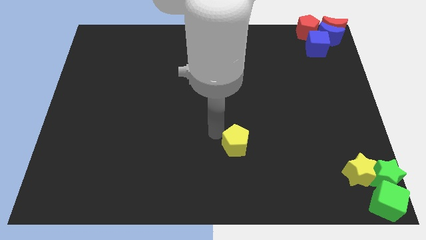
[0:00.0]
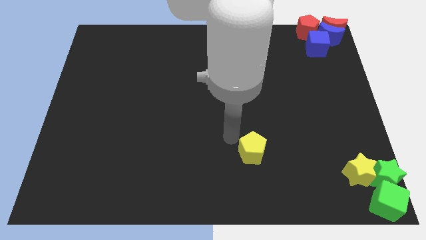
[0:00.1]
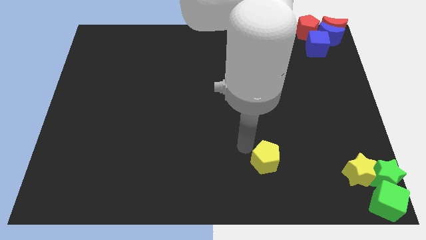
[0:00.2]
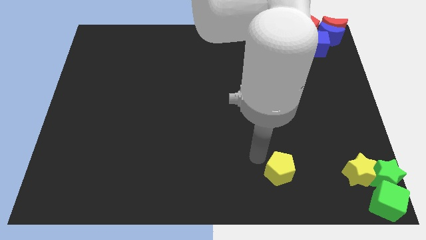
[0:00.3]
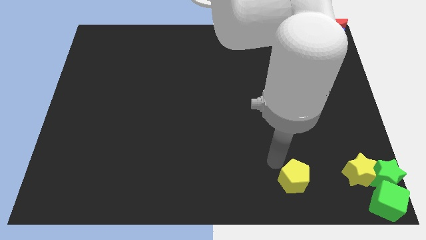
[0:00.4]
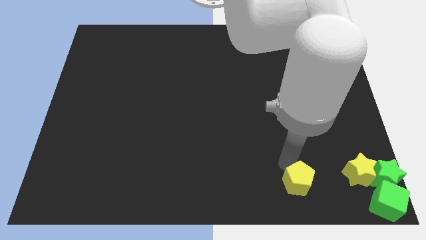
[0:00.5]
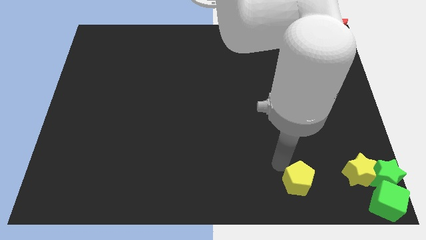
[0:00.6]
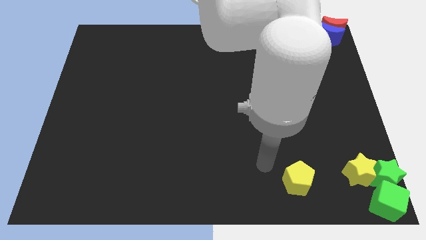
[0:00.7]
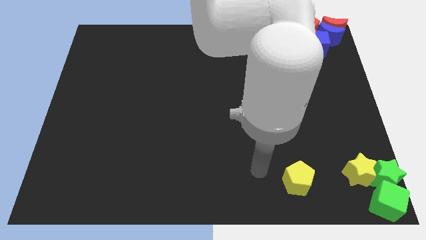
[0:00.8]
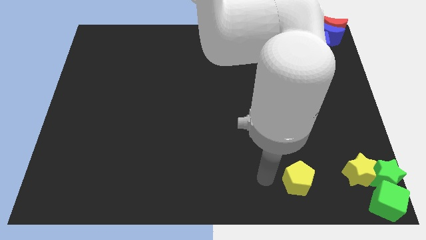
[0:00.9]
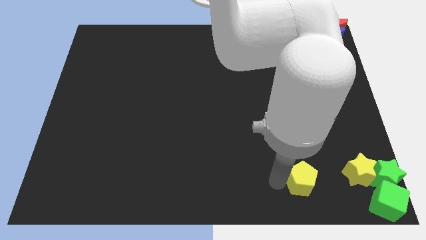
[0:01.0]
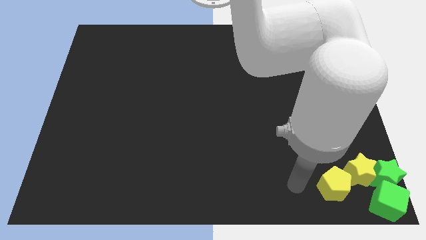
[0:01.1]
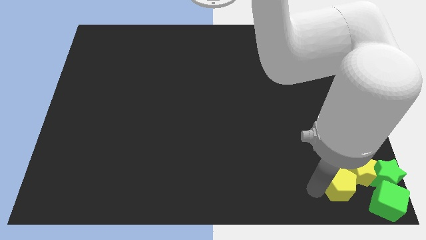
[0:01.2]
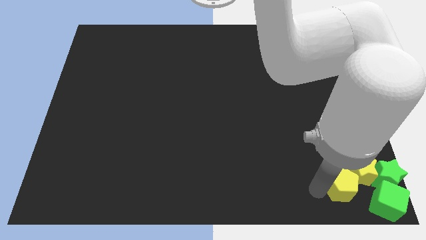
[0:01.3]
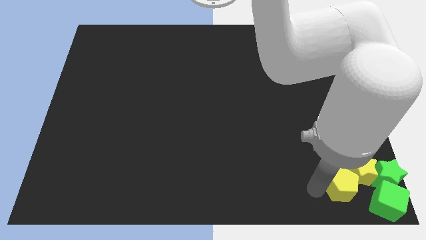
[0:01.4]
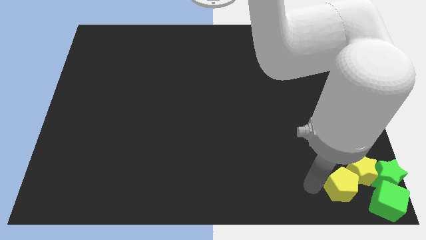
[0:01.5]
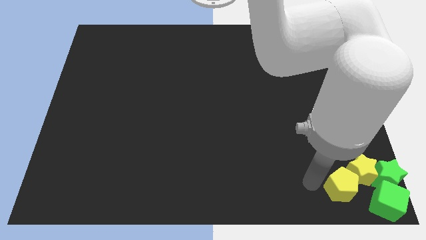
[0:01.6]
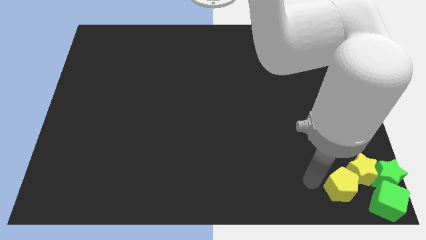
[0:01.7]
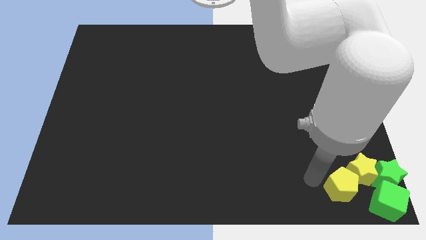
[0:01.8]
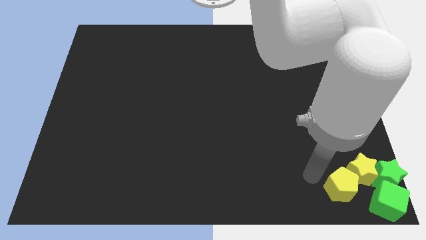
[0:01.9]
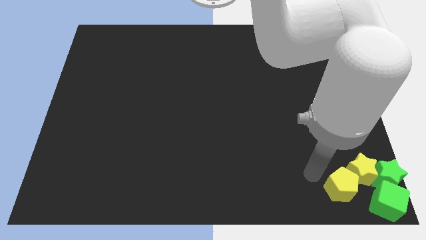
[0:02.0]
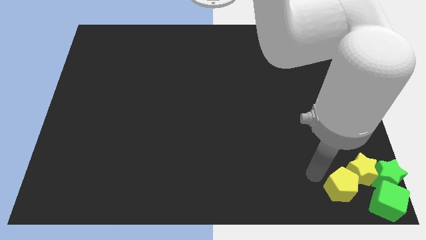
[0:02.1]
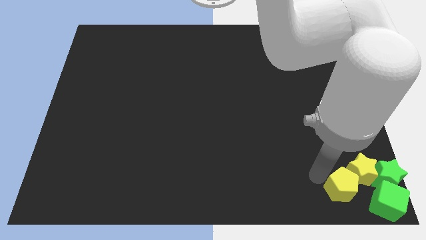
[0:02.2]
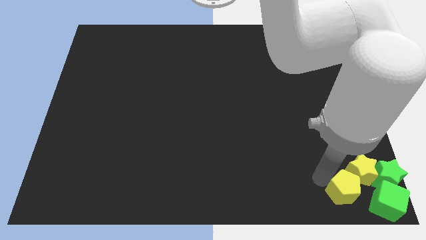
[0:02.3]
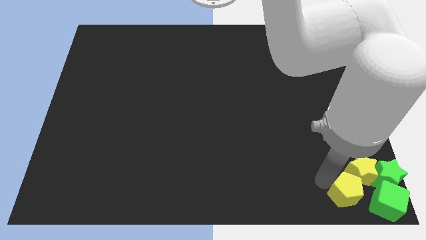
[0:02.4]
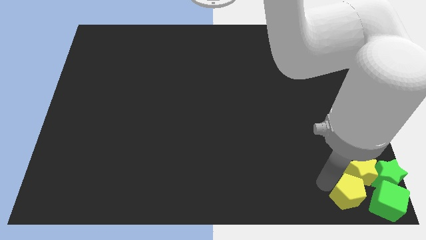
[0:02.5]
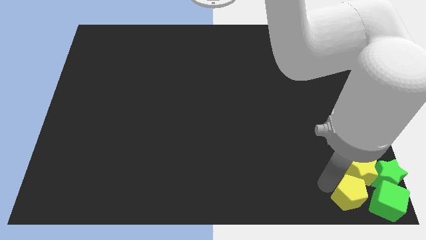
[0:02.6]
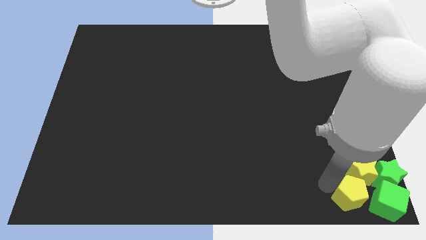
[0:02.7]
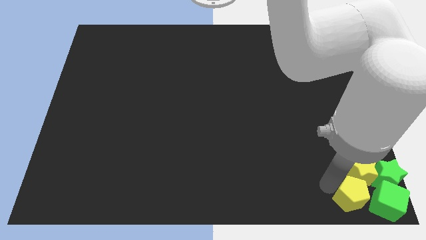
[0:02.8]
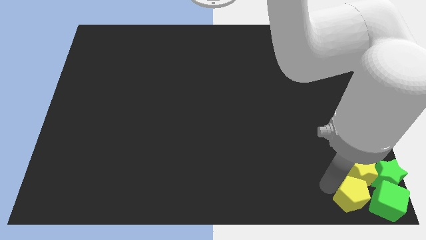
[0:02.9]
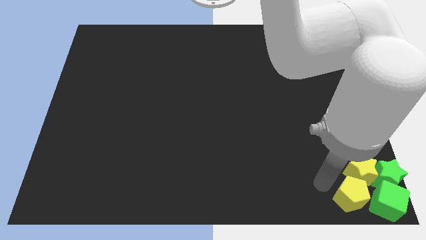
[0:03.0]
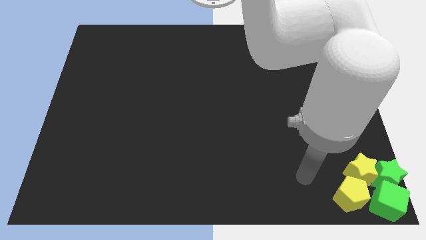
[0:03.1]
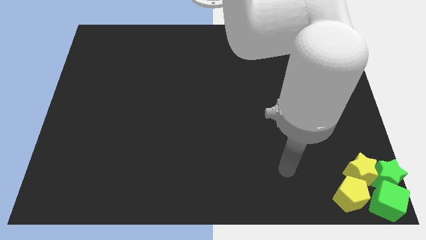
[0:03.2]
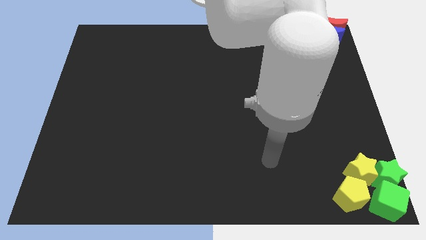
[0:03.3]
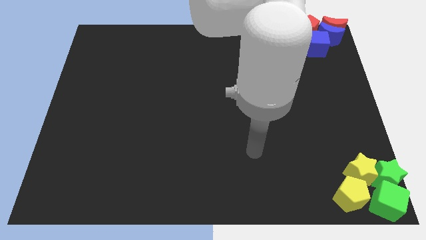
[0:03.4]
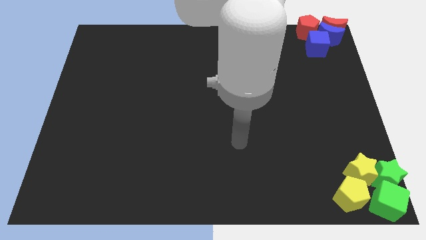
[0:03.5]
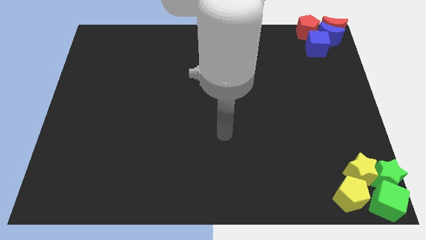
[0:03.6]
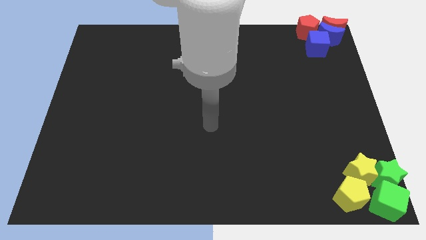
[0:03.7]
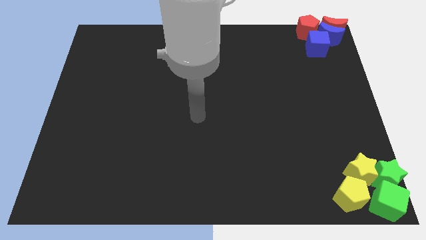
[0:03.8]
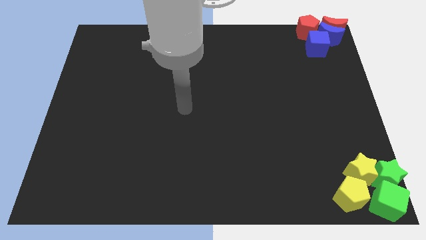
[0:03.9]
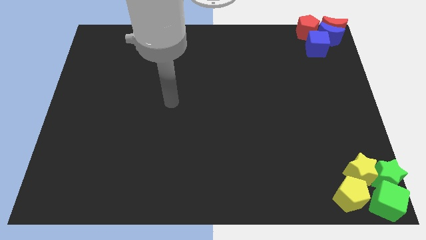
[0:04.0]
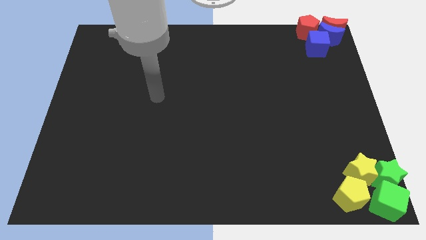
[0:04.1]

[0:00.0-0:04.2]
place the yellow pentagon towards the left side of the green cube

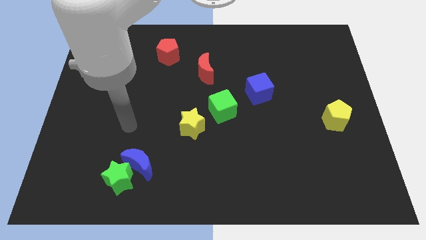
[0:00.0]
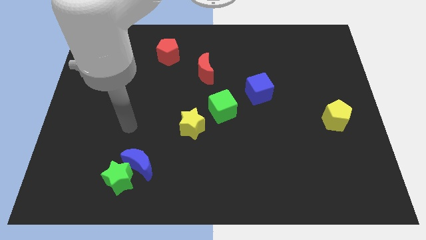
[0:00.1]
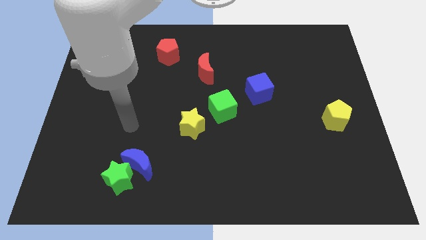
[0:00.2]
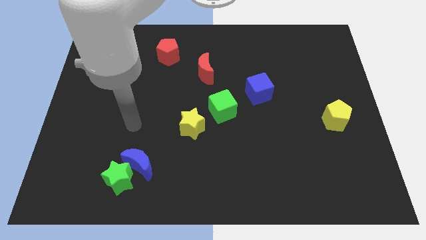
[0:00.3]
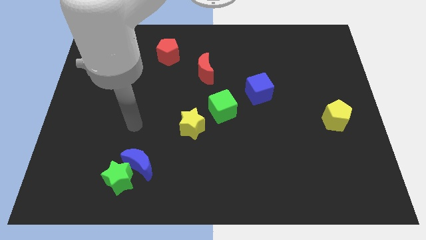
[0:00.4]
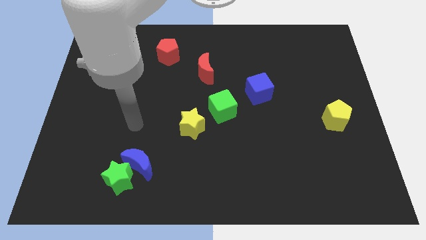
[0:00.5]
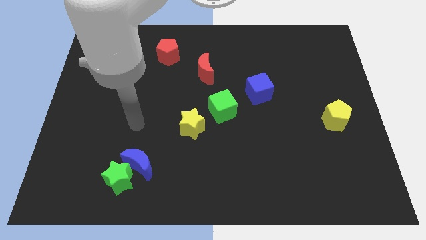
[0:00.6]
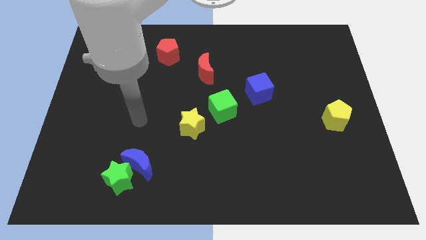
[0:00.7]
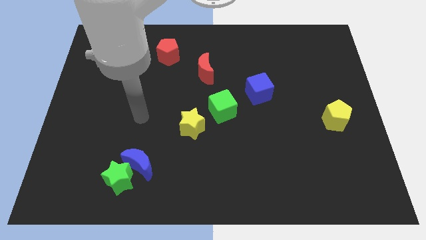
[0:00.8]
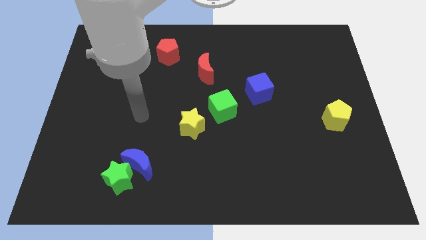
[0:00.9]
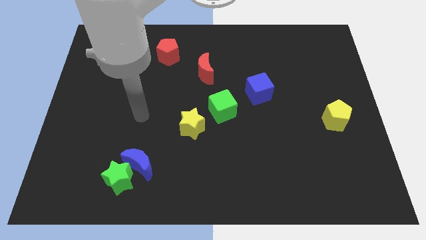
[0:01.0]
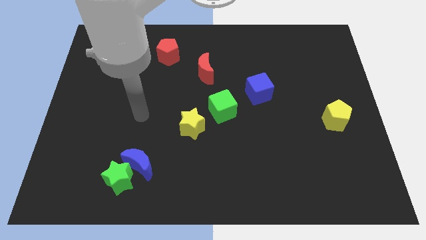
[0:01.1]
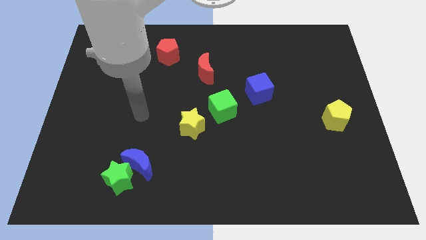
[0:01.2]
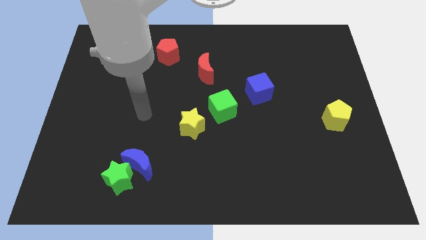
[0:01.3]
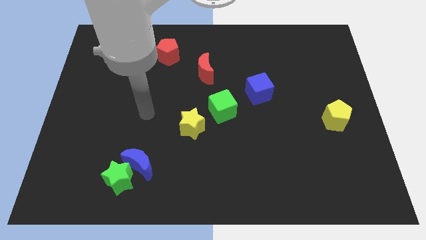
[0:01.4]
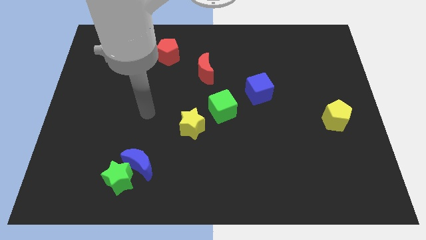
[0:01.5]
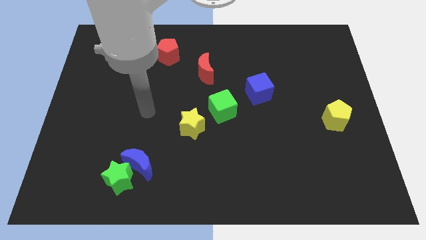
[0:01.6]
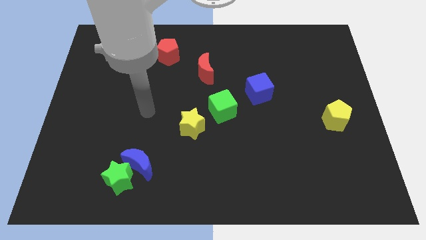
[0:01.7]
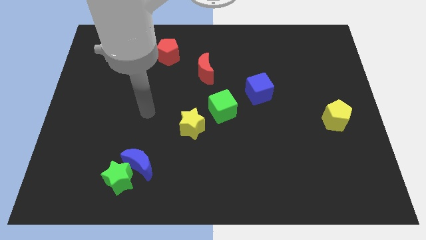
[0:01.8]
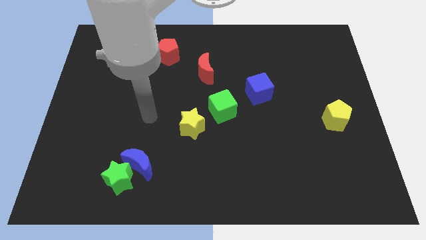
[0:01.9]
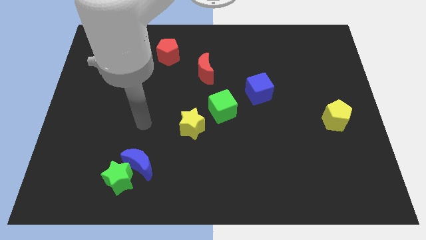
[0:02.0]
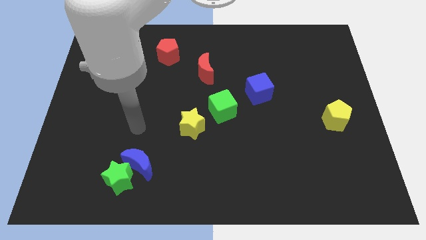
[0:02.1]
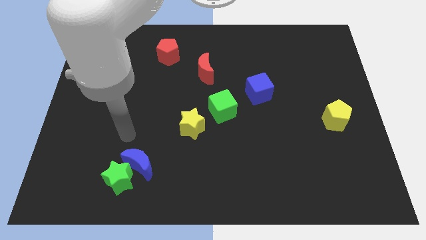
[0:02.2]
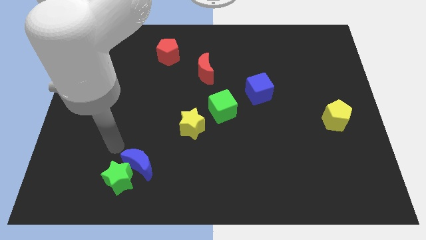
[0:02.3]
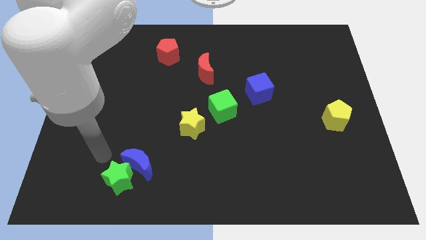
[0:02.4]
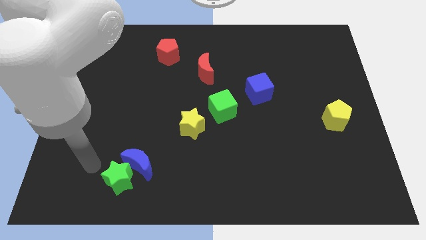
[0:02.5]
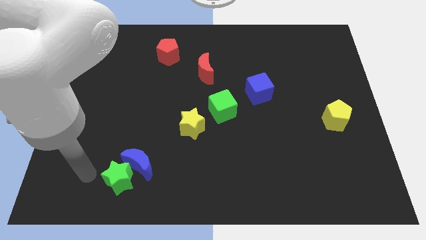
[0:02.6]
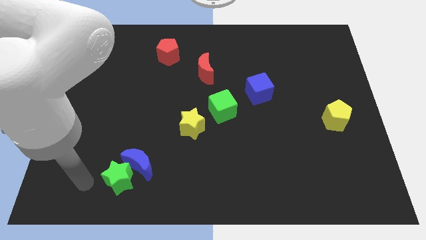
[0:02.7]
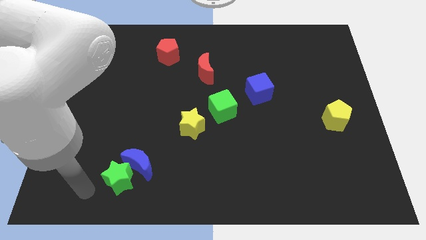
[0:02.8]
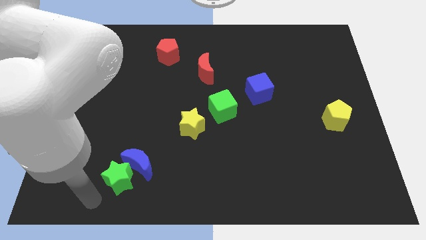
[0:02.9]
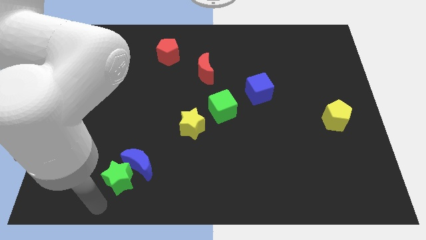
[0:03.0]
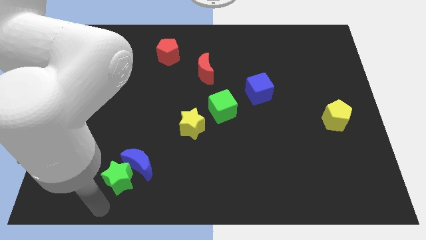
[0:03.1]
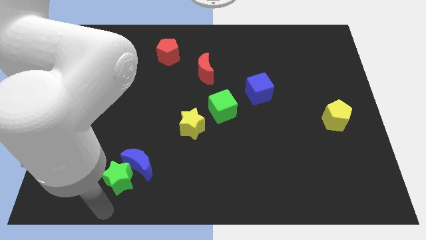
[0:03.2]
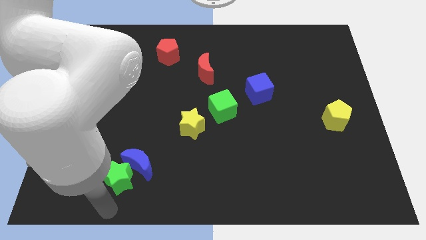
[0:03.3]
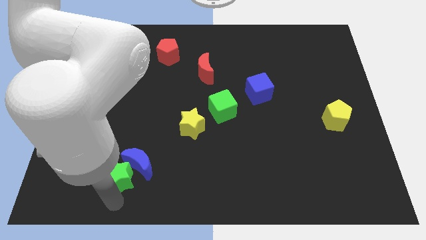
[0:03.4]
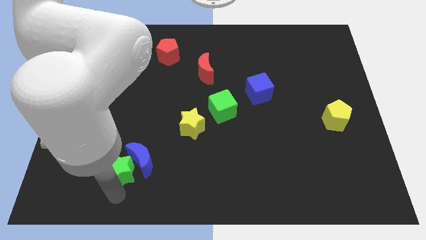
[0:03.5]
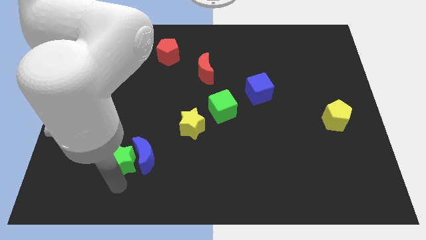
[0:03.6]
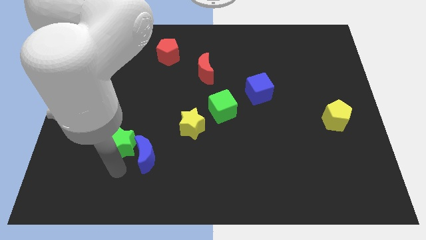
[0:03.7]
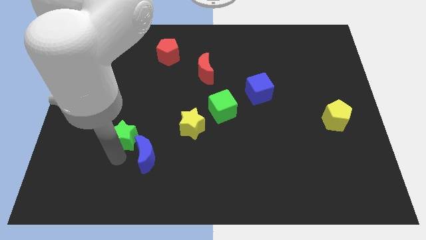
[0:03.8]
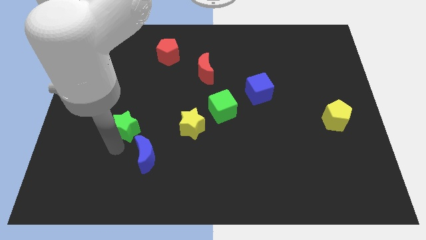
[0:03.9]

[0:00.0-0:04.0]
push the green star to the horizontal left side of the yellow star

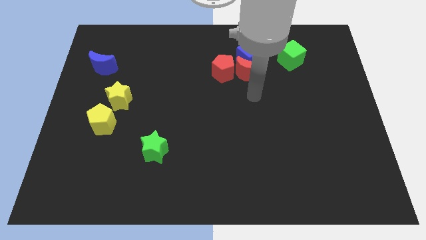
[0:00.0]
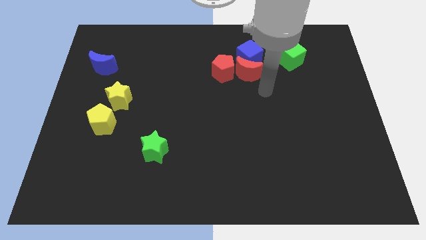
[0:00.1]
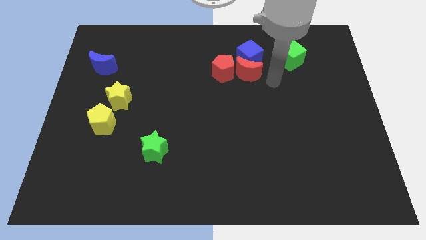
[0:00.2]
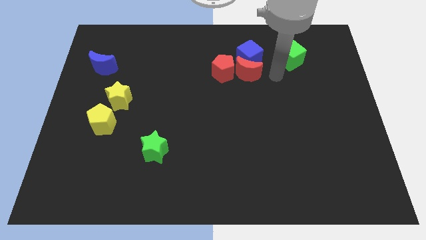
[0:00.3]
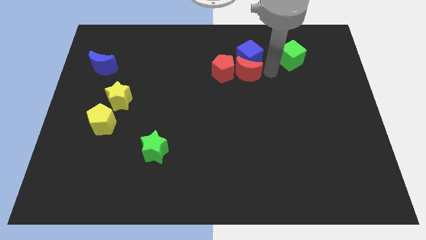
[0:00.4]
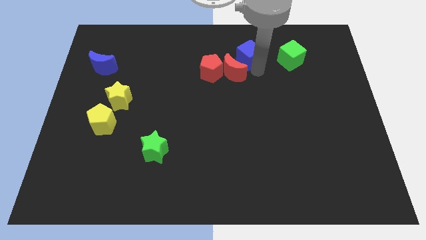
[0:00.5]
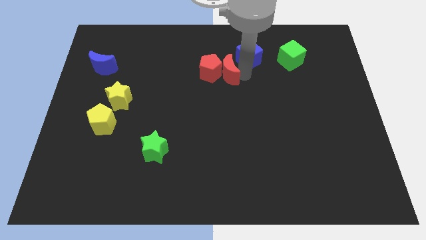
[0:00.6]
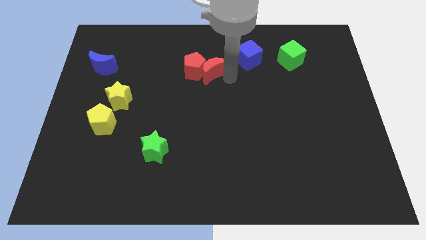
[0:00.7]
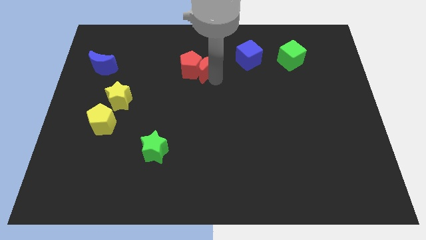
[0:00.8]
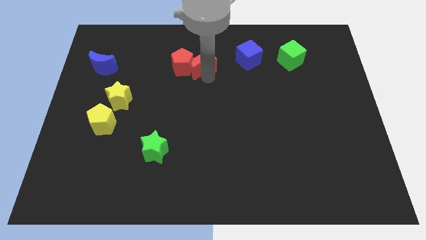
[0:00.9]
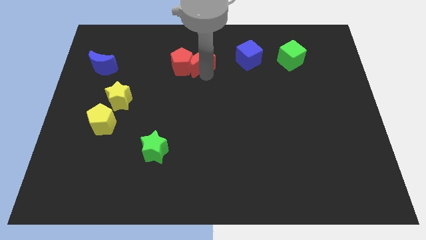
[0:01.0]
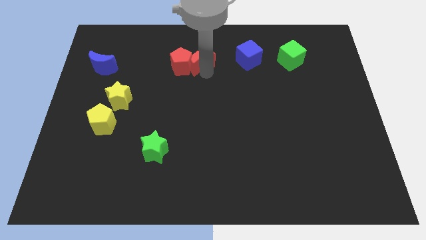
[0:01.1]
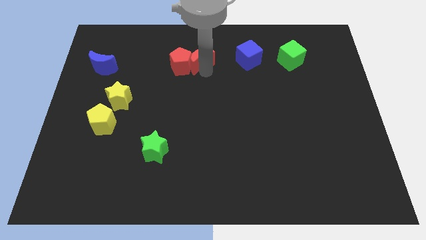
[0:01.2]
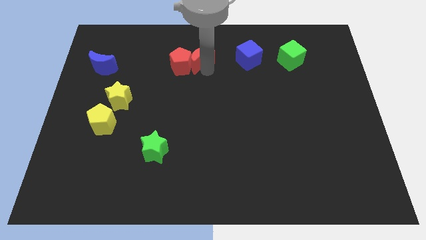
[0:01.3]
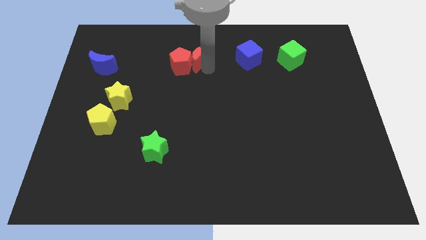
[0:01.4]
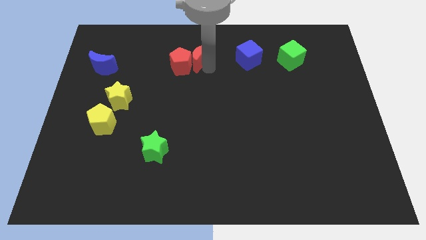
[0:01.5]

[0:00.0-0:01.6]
move the red blocks to the left of the blue cube
